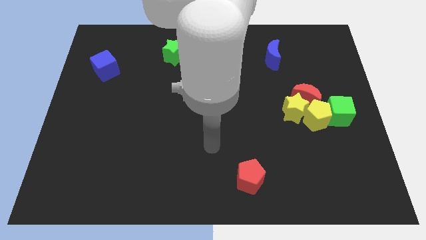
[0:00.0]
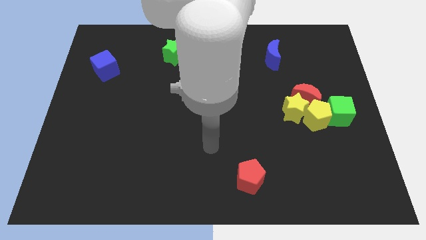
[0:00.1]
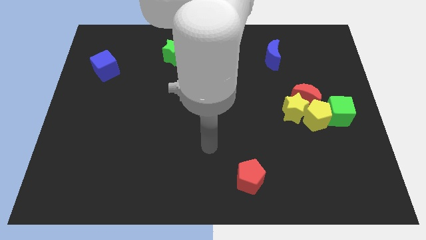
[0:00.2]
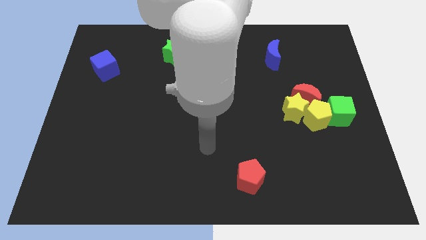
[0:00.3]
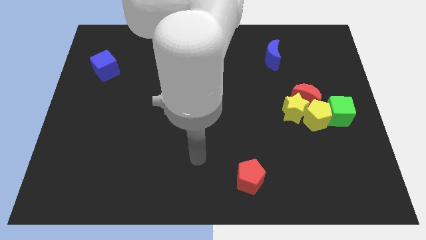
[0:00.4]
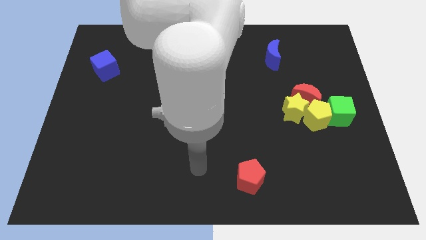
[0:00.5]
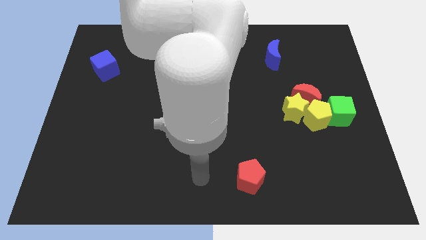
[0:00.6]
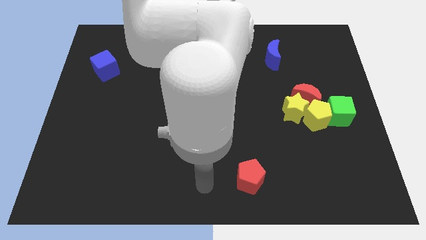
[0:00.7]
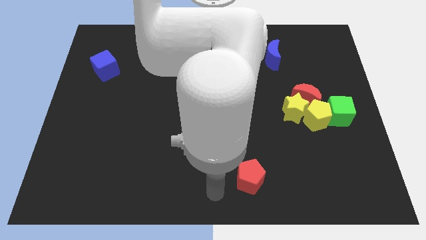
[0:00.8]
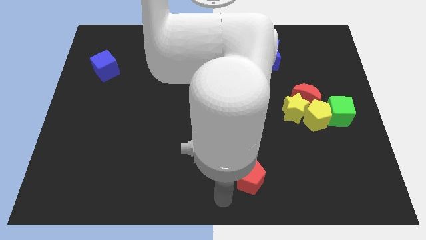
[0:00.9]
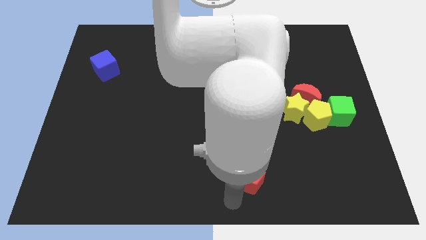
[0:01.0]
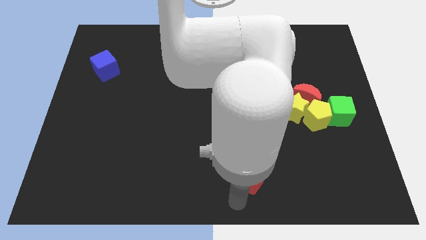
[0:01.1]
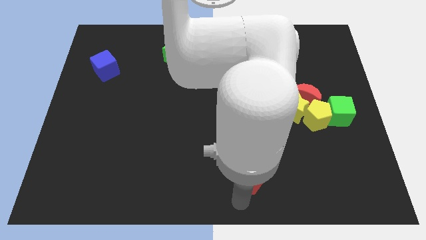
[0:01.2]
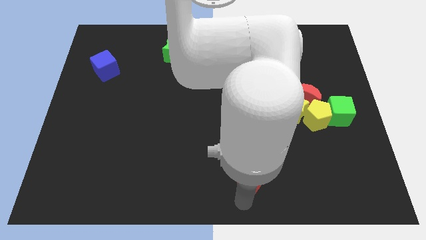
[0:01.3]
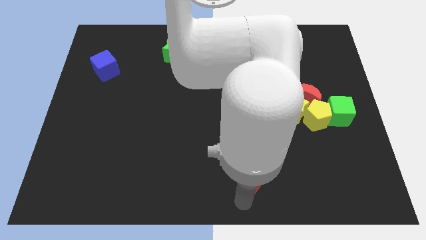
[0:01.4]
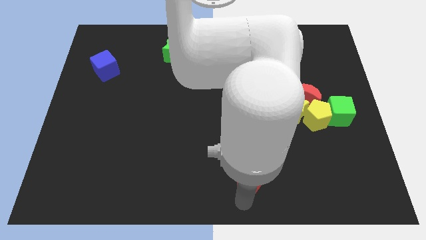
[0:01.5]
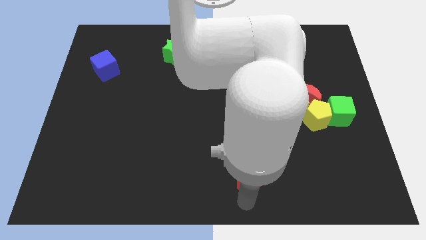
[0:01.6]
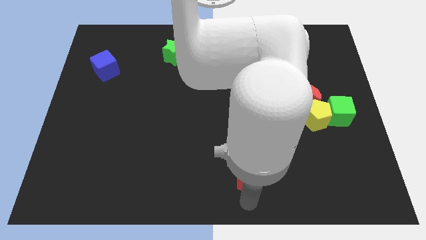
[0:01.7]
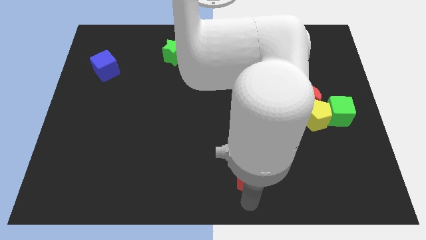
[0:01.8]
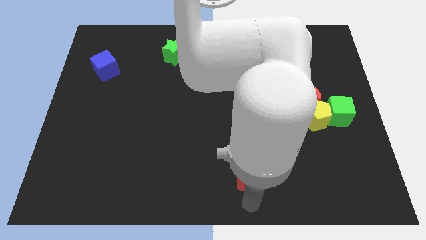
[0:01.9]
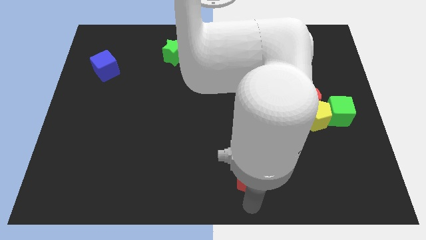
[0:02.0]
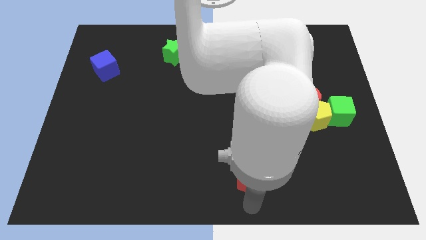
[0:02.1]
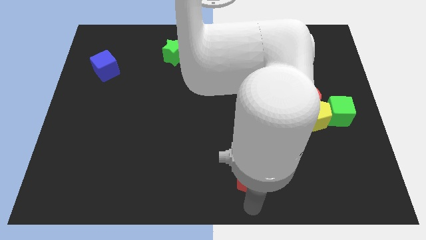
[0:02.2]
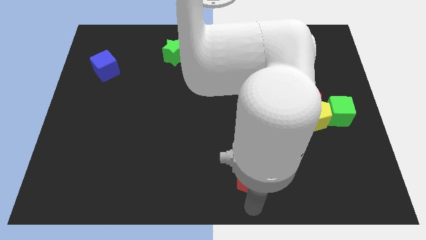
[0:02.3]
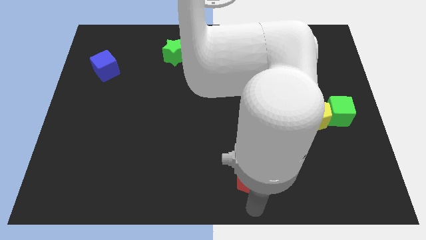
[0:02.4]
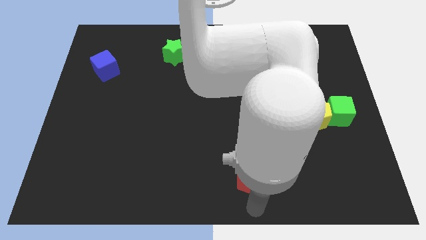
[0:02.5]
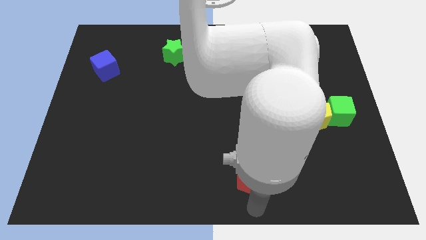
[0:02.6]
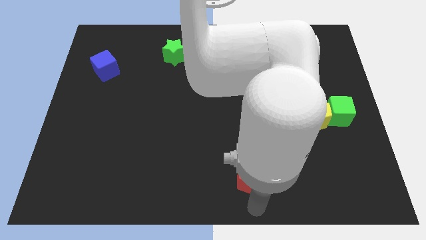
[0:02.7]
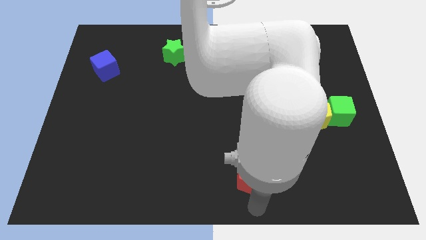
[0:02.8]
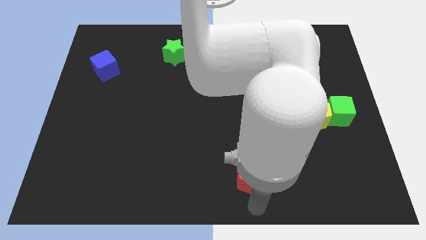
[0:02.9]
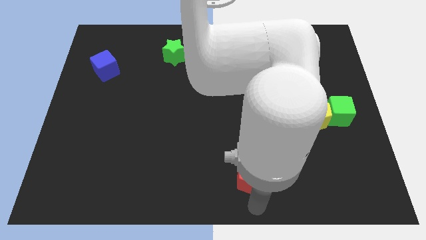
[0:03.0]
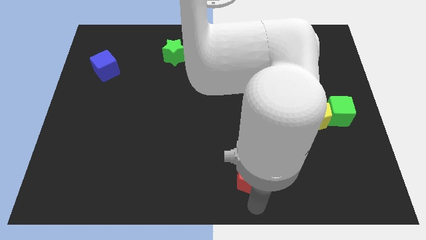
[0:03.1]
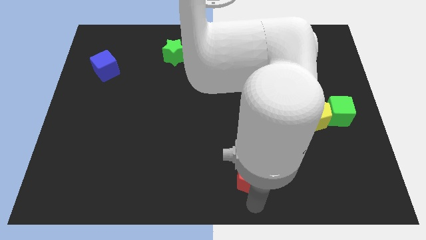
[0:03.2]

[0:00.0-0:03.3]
move the arm towards red pentagon

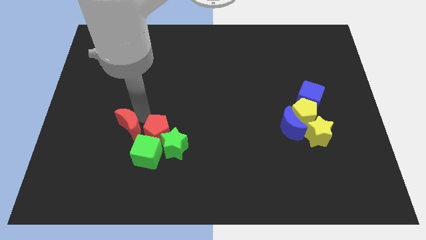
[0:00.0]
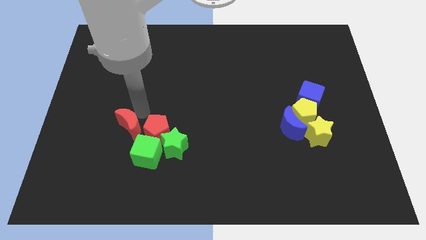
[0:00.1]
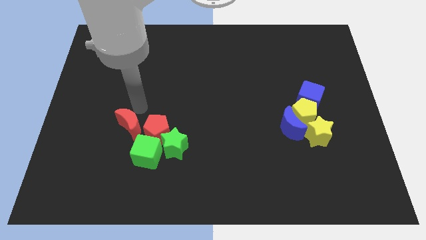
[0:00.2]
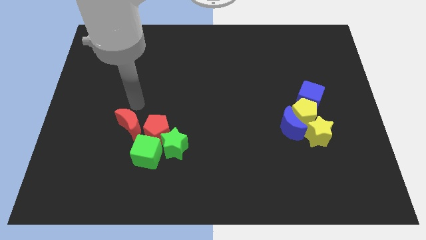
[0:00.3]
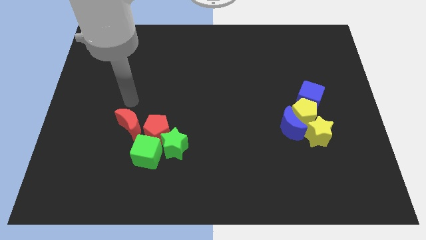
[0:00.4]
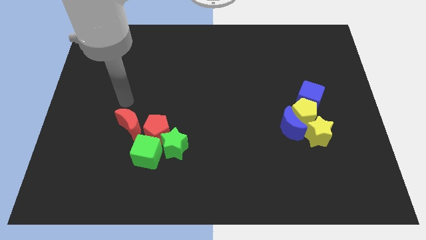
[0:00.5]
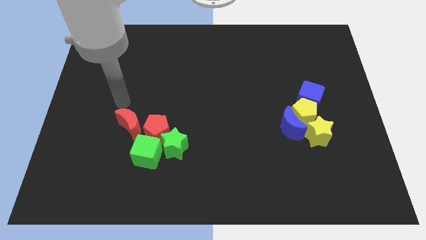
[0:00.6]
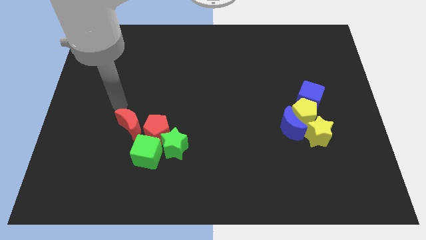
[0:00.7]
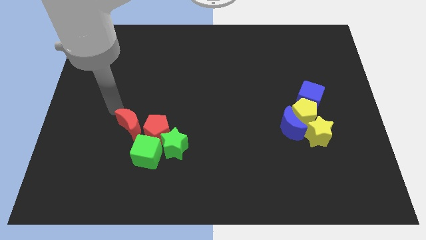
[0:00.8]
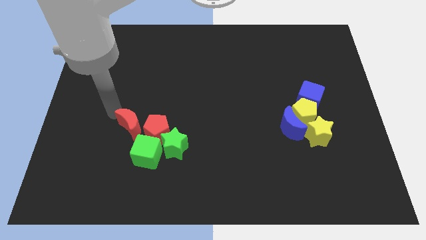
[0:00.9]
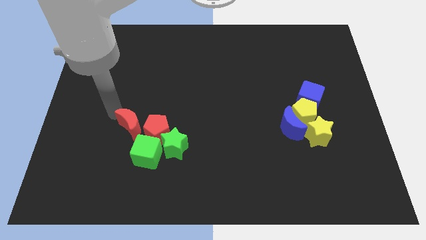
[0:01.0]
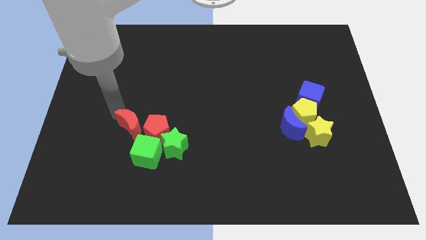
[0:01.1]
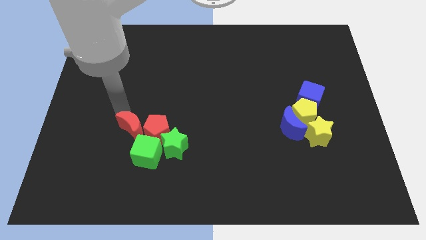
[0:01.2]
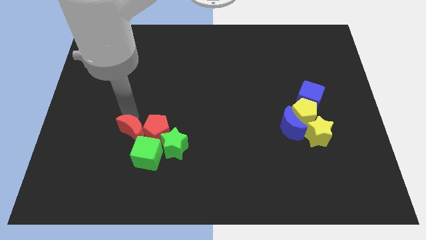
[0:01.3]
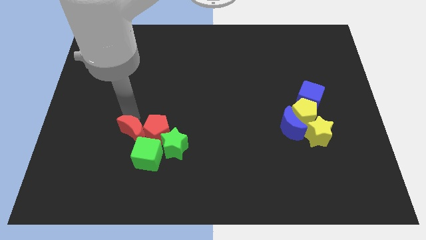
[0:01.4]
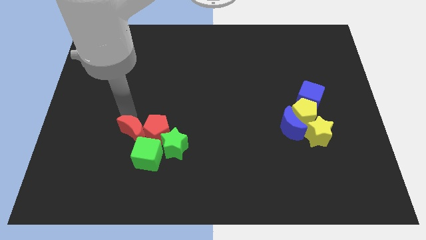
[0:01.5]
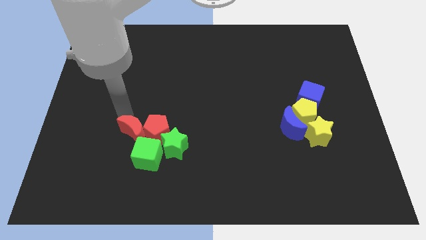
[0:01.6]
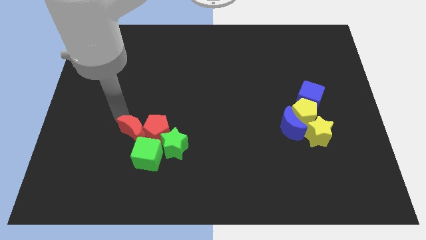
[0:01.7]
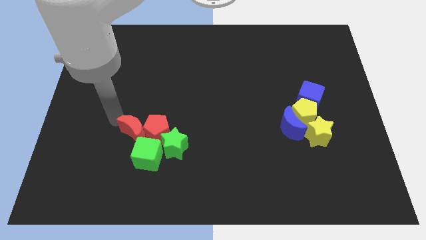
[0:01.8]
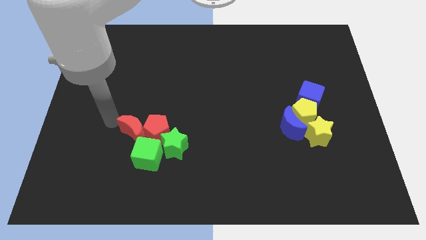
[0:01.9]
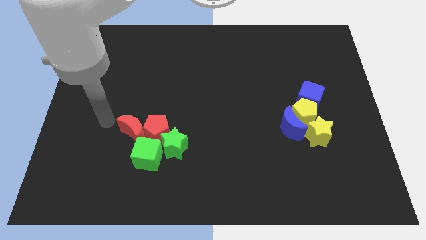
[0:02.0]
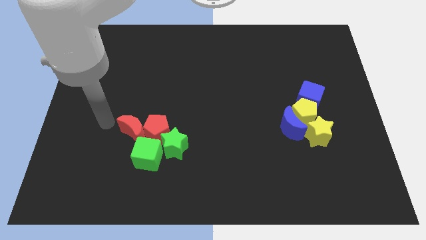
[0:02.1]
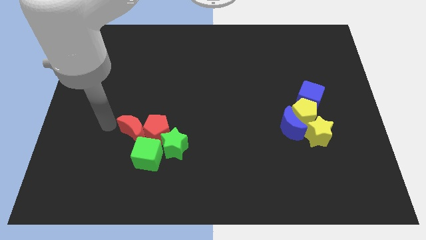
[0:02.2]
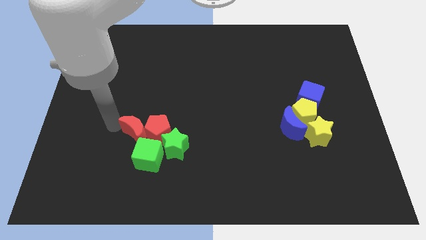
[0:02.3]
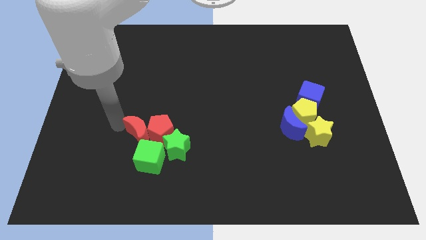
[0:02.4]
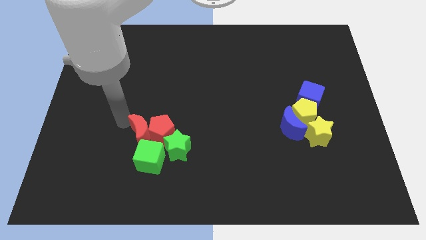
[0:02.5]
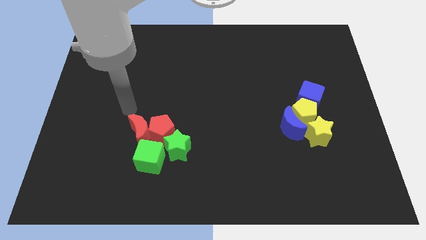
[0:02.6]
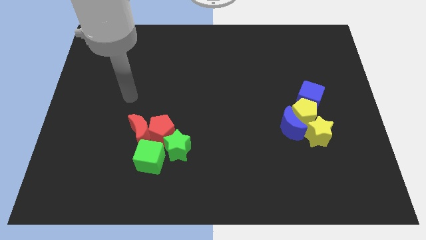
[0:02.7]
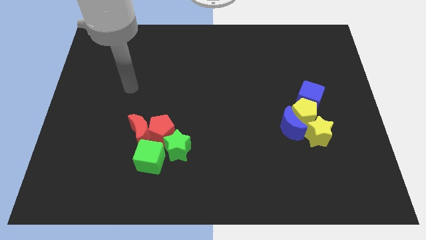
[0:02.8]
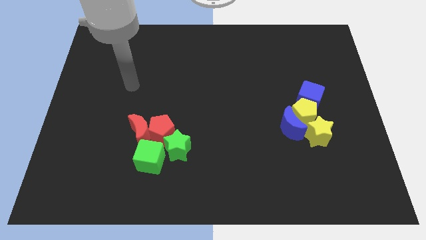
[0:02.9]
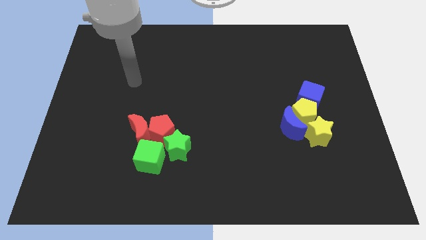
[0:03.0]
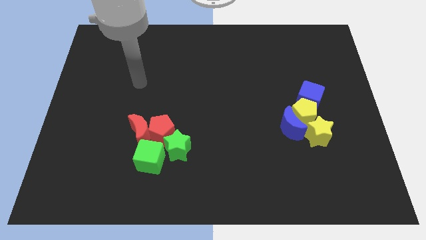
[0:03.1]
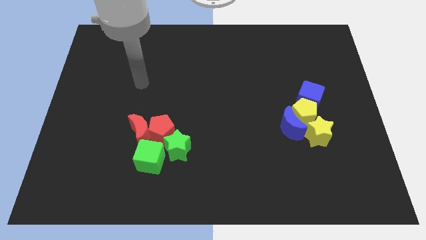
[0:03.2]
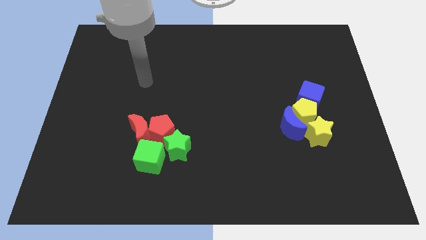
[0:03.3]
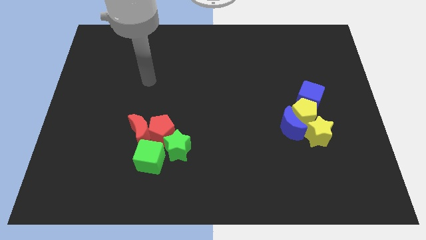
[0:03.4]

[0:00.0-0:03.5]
move the red moon into the group of blocks

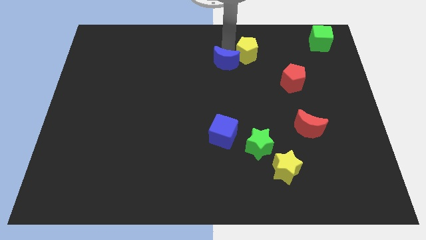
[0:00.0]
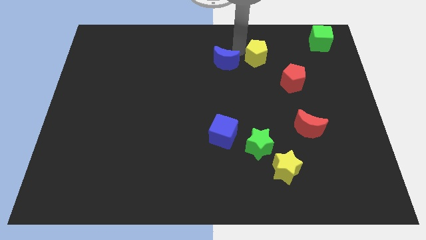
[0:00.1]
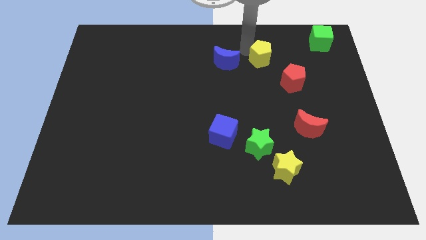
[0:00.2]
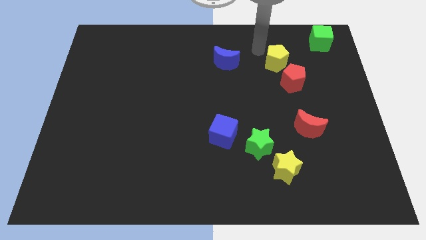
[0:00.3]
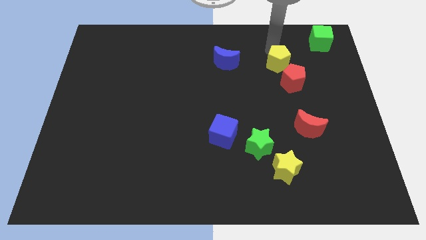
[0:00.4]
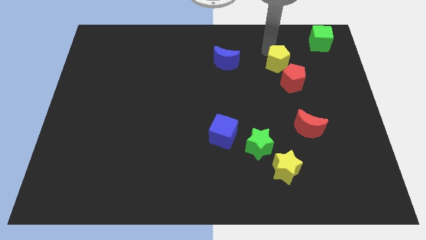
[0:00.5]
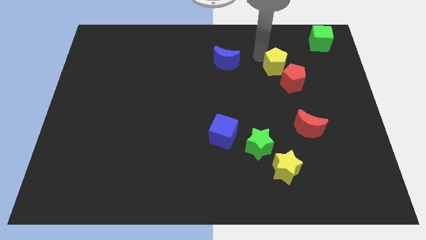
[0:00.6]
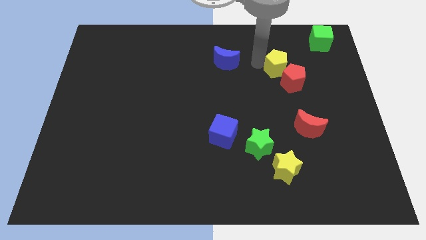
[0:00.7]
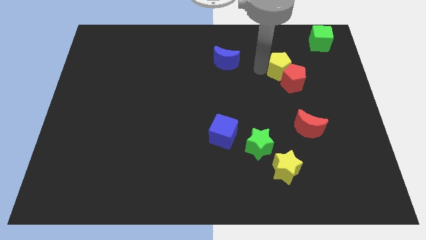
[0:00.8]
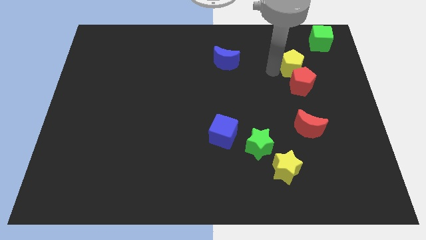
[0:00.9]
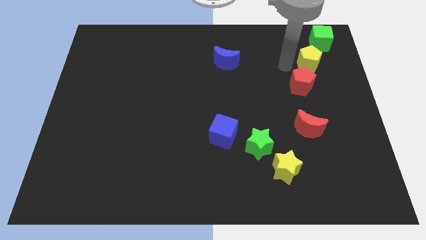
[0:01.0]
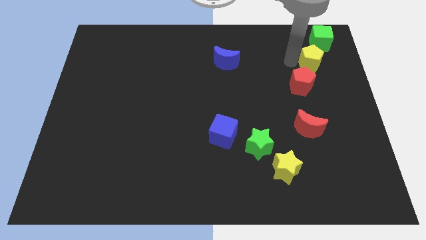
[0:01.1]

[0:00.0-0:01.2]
place yellow pentagon in between green cube and red pentagon

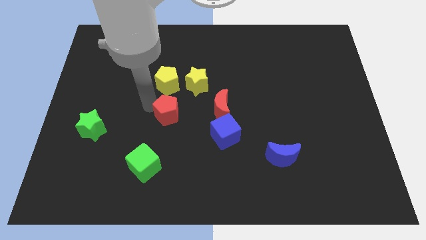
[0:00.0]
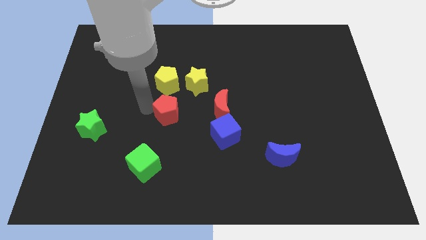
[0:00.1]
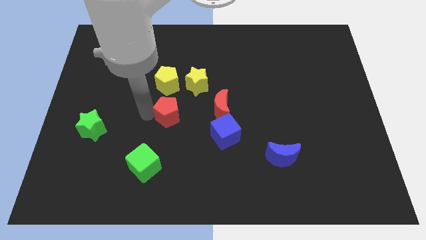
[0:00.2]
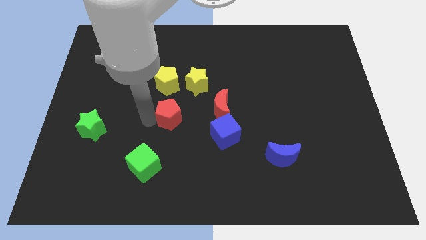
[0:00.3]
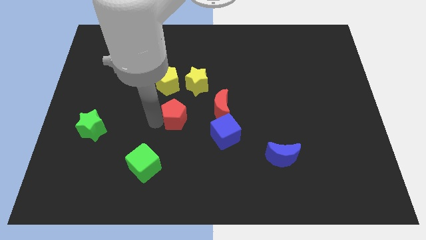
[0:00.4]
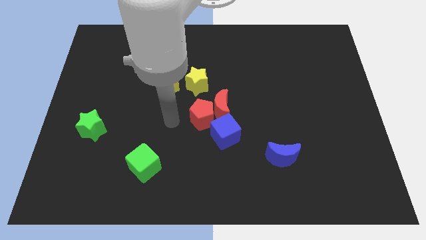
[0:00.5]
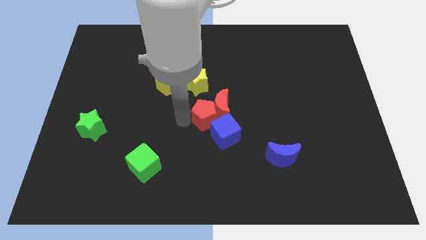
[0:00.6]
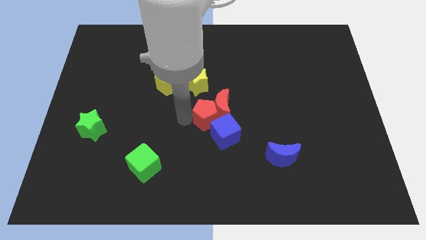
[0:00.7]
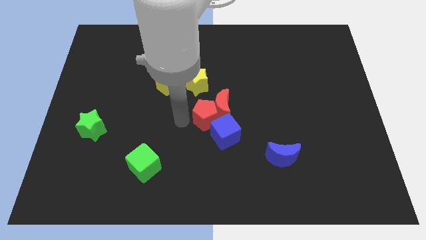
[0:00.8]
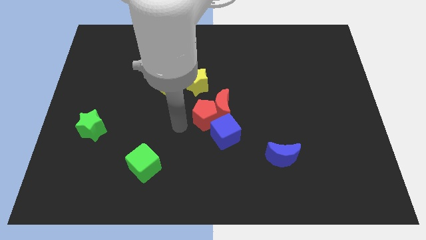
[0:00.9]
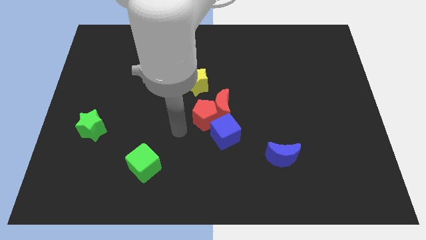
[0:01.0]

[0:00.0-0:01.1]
push red pentagon in to red crescent
